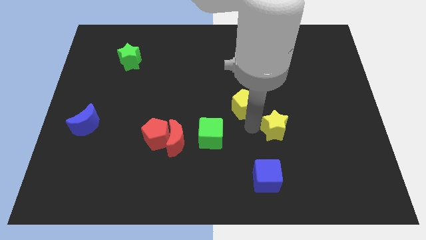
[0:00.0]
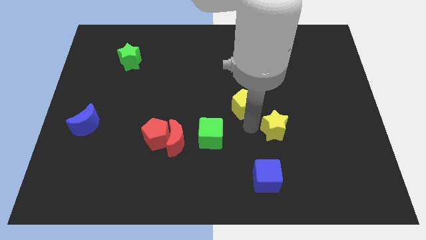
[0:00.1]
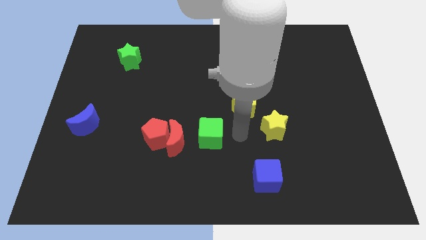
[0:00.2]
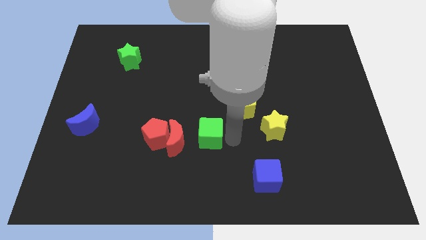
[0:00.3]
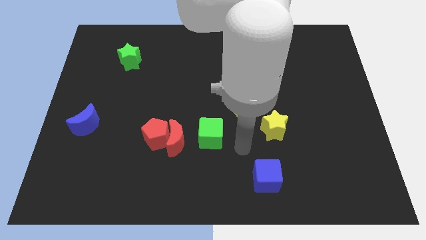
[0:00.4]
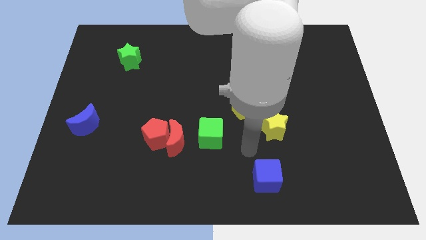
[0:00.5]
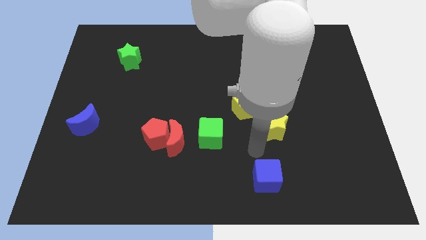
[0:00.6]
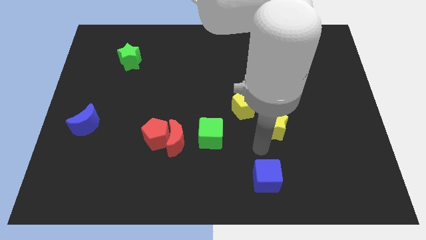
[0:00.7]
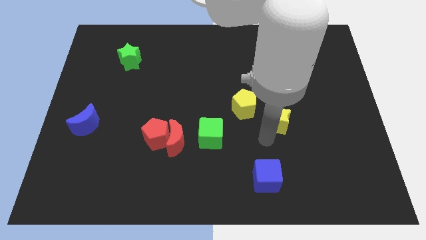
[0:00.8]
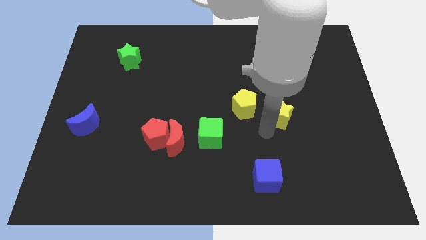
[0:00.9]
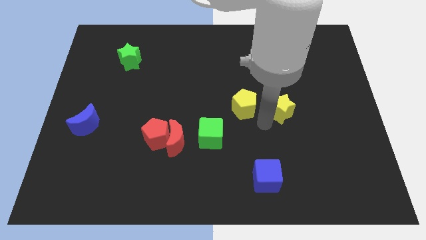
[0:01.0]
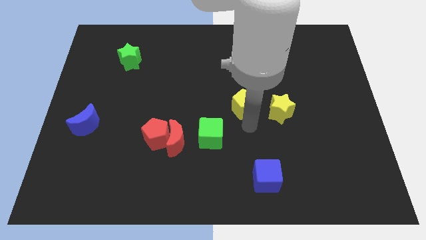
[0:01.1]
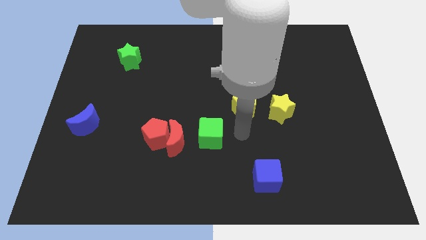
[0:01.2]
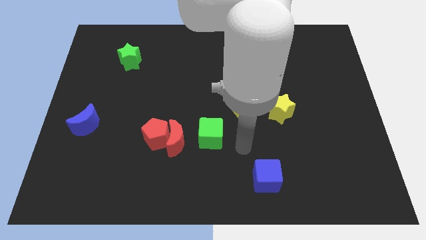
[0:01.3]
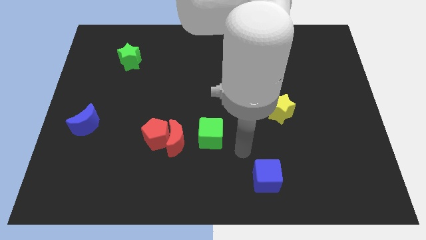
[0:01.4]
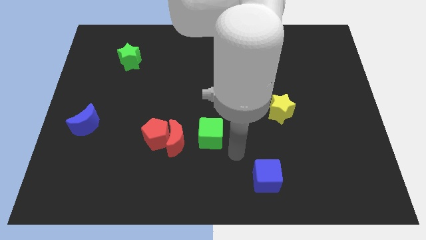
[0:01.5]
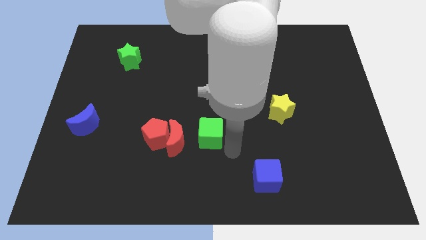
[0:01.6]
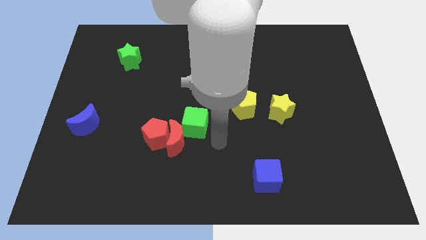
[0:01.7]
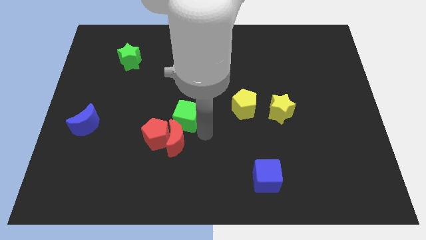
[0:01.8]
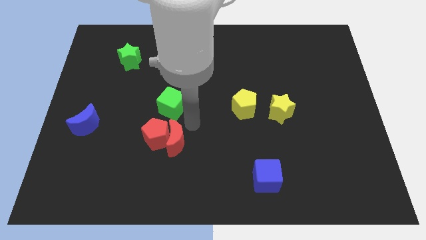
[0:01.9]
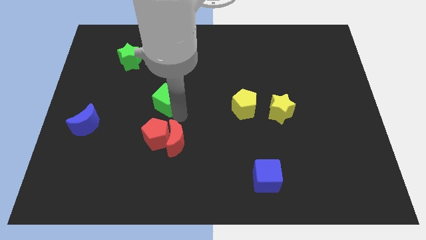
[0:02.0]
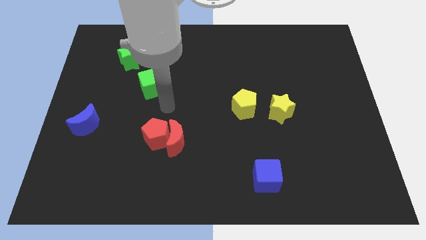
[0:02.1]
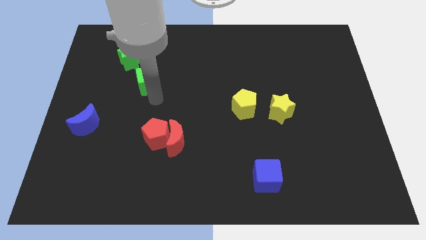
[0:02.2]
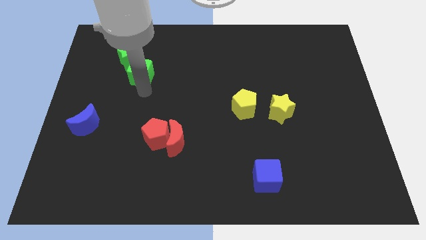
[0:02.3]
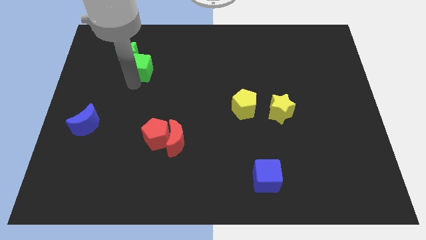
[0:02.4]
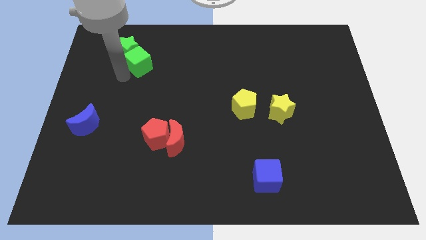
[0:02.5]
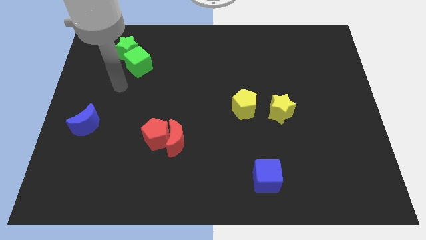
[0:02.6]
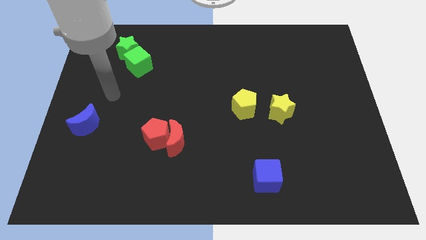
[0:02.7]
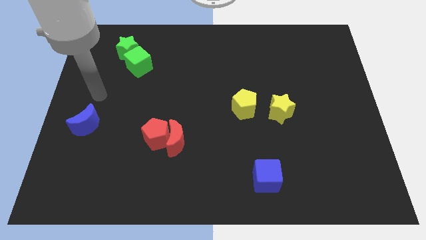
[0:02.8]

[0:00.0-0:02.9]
place yellow blocks and green blocks at one place

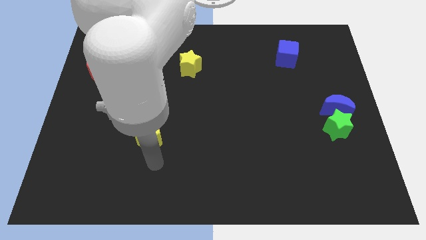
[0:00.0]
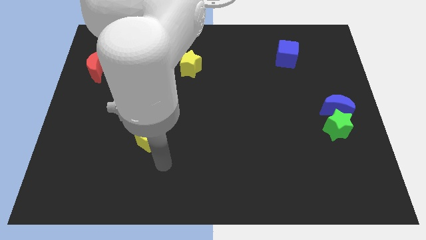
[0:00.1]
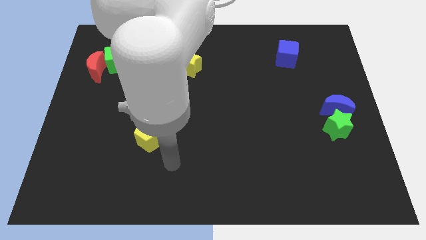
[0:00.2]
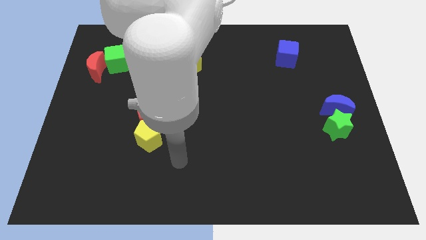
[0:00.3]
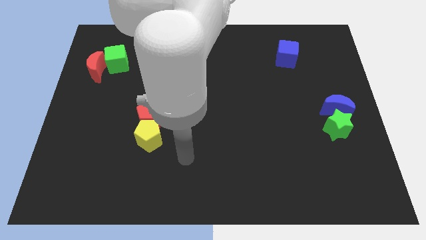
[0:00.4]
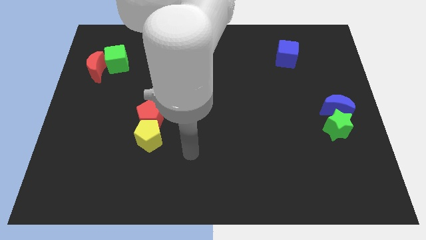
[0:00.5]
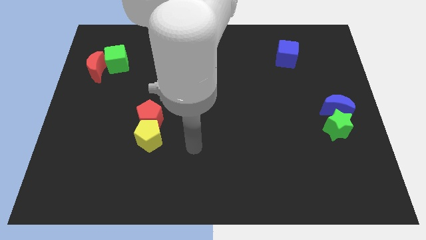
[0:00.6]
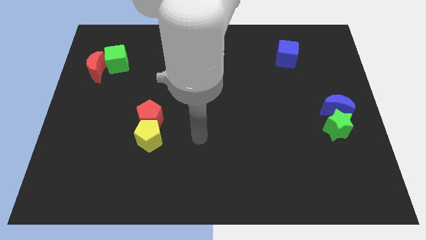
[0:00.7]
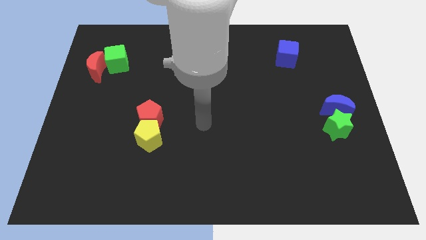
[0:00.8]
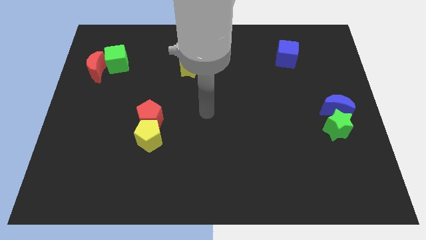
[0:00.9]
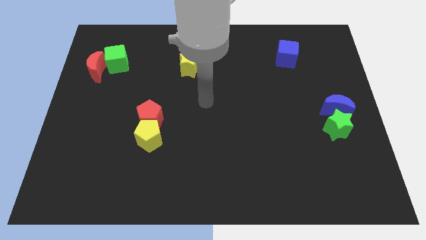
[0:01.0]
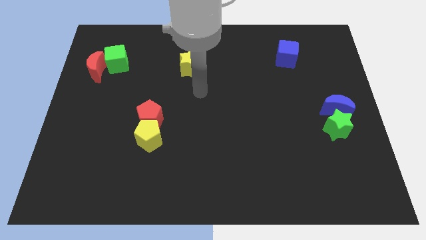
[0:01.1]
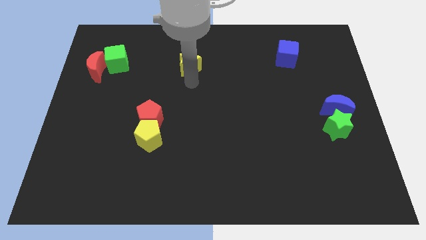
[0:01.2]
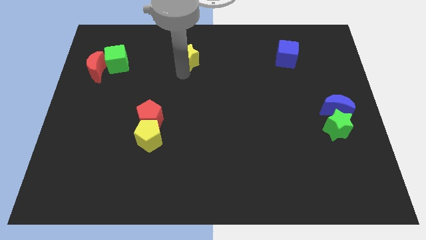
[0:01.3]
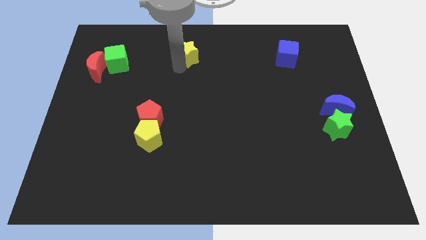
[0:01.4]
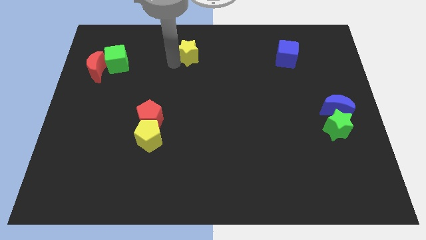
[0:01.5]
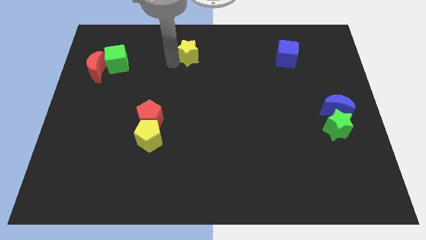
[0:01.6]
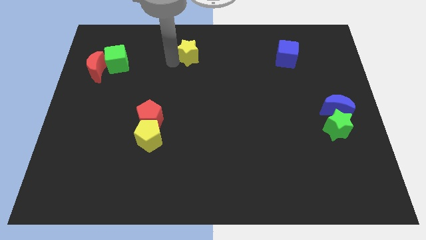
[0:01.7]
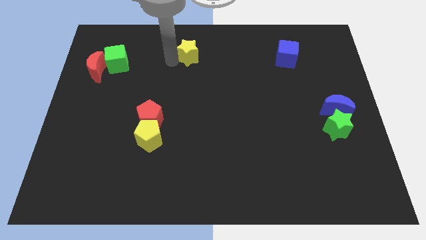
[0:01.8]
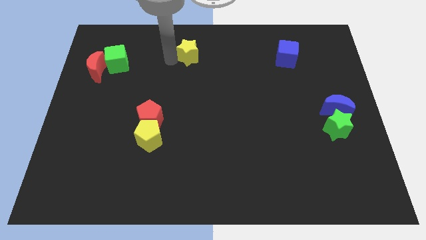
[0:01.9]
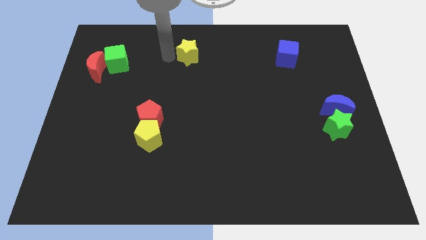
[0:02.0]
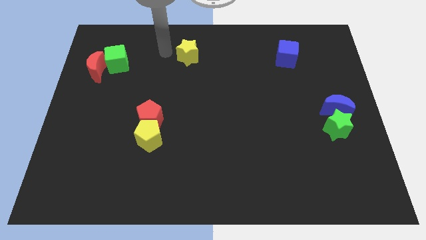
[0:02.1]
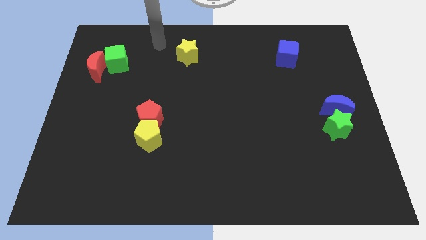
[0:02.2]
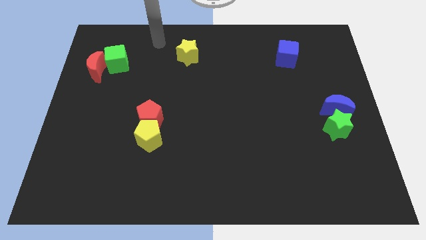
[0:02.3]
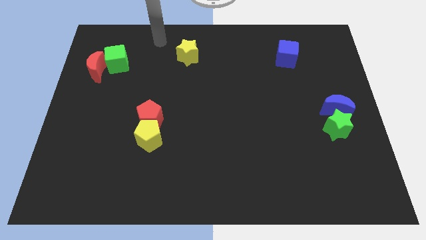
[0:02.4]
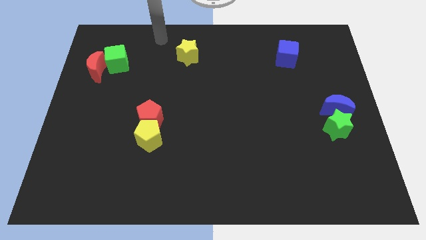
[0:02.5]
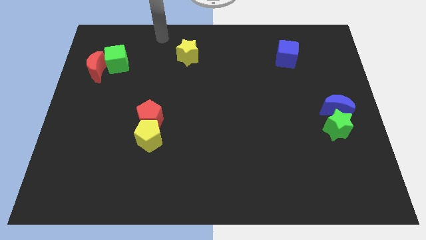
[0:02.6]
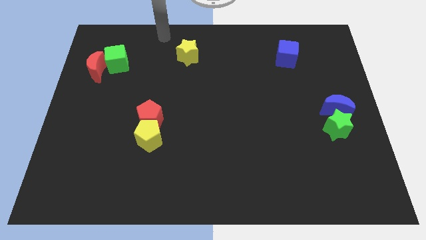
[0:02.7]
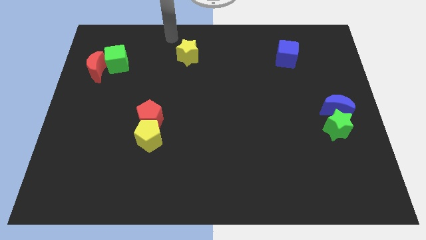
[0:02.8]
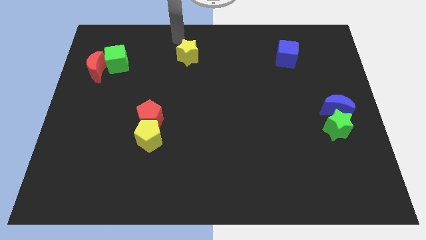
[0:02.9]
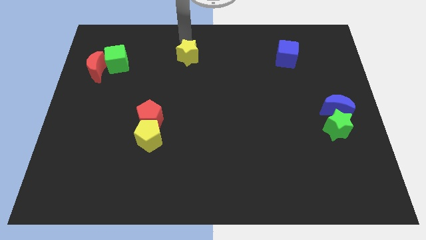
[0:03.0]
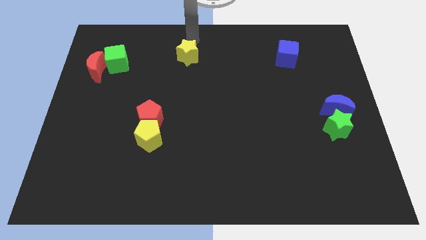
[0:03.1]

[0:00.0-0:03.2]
place your arm above the yellow star

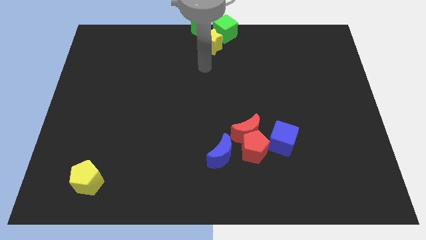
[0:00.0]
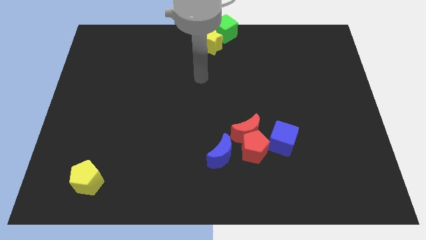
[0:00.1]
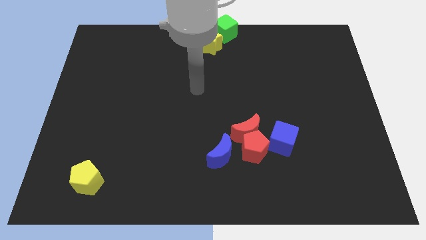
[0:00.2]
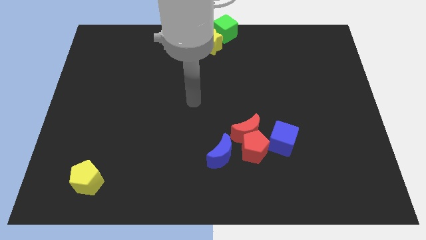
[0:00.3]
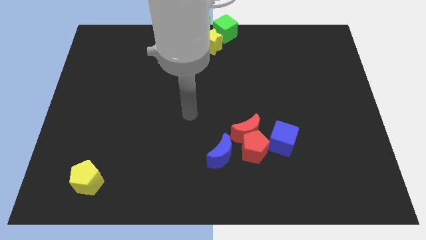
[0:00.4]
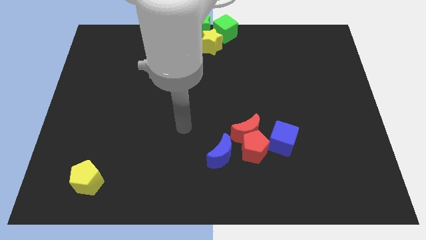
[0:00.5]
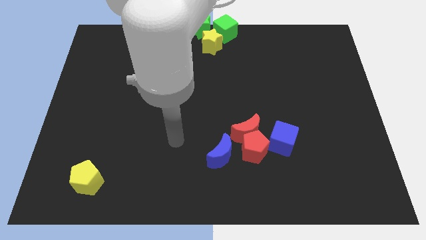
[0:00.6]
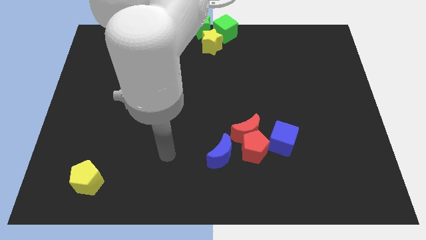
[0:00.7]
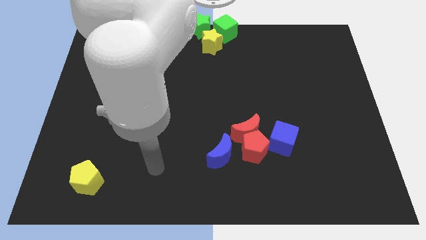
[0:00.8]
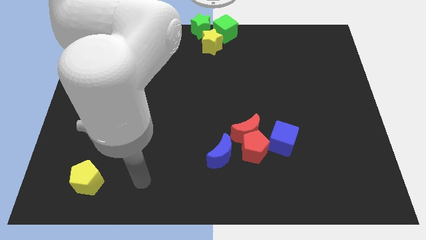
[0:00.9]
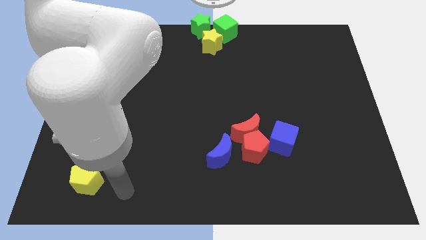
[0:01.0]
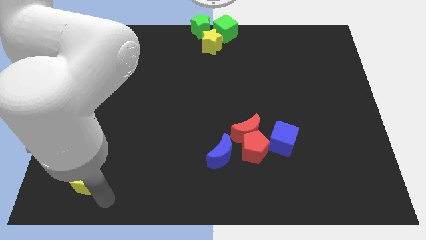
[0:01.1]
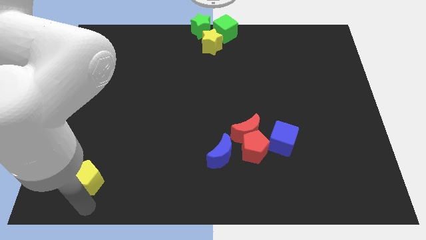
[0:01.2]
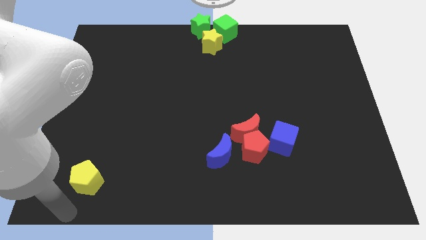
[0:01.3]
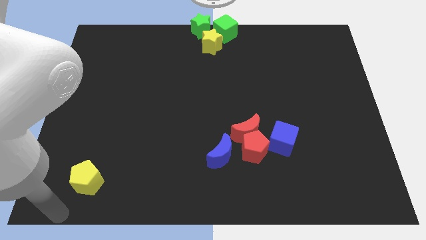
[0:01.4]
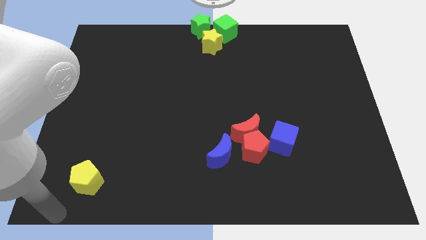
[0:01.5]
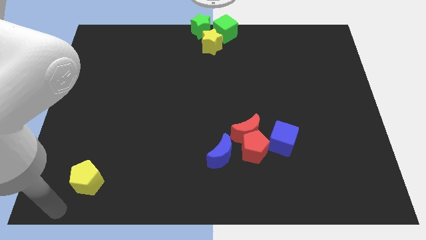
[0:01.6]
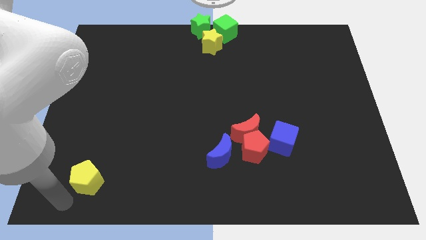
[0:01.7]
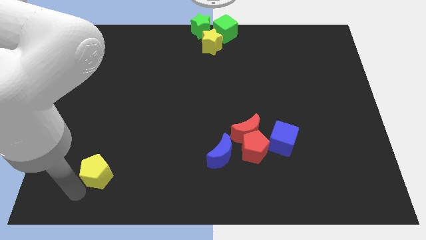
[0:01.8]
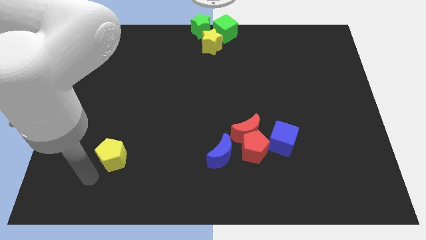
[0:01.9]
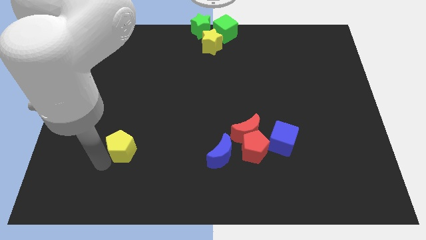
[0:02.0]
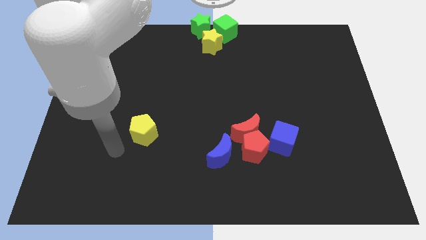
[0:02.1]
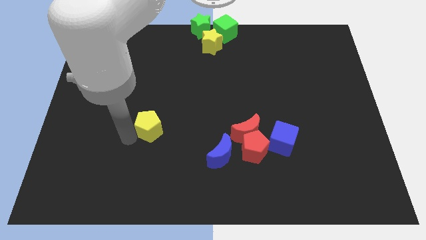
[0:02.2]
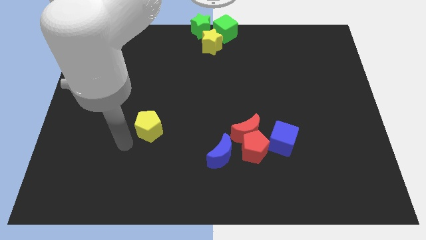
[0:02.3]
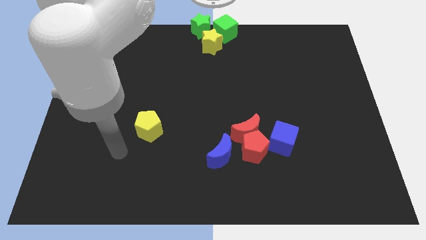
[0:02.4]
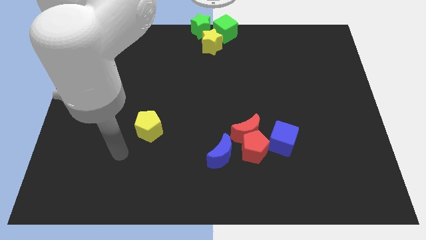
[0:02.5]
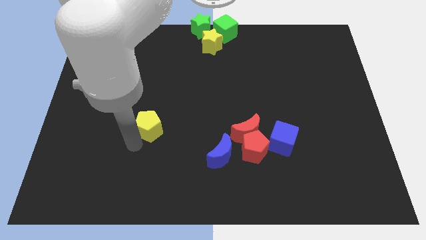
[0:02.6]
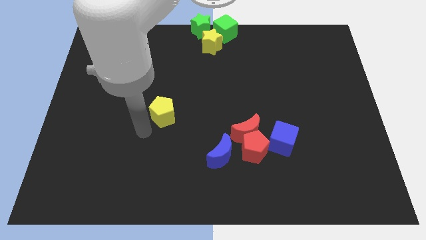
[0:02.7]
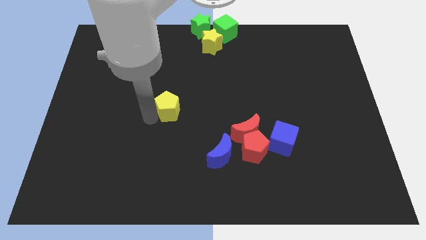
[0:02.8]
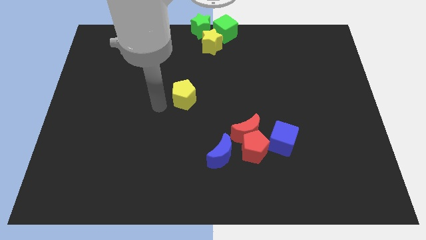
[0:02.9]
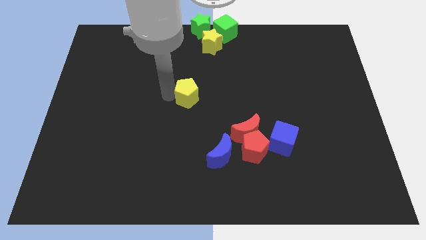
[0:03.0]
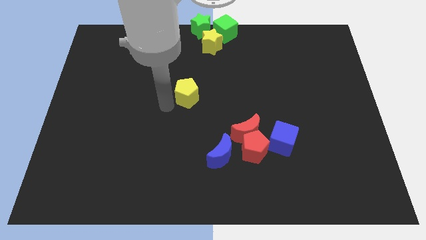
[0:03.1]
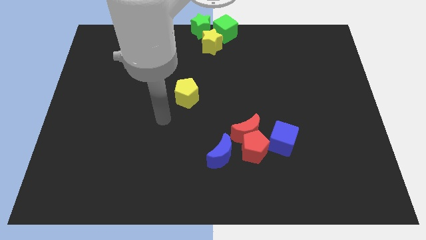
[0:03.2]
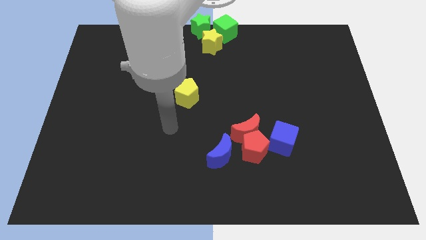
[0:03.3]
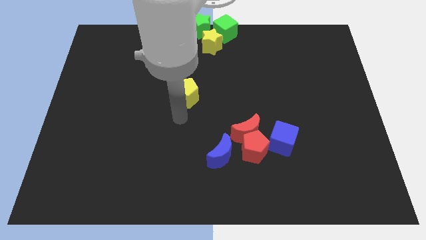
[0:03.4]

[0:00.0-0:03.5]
move the yellow pentagon to the top left of the blue crescent
